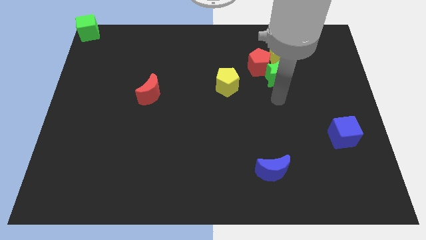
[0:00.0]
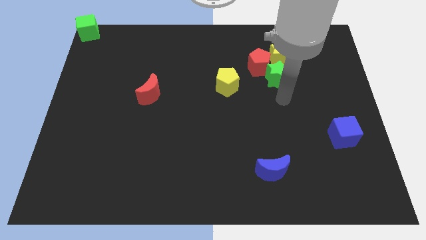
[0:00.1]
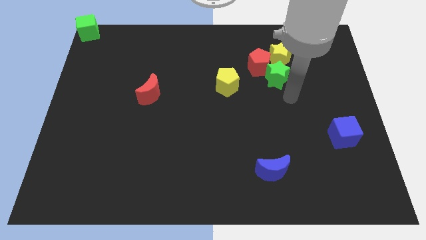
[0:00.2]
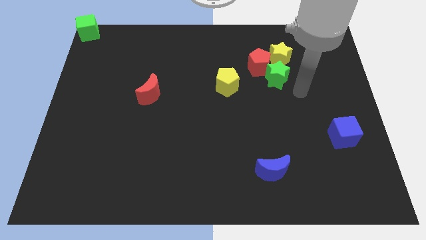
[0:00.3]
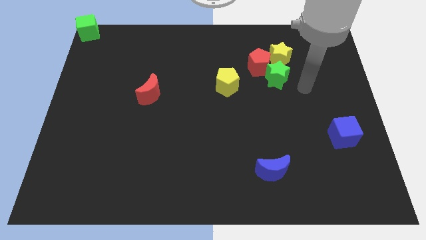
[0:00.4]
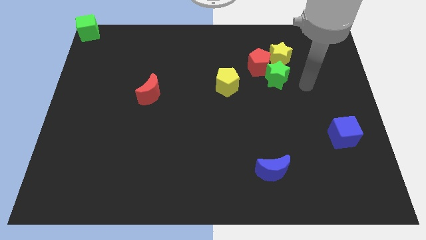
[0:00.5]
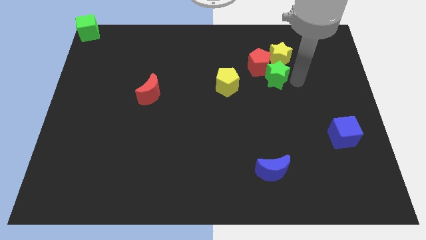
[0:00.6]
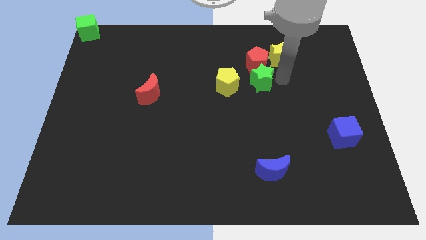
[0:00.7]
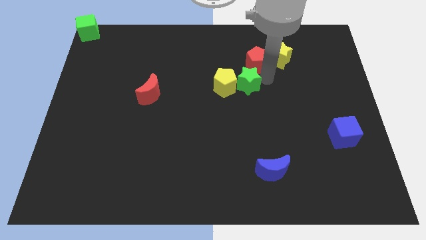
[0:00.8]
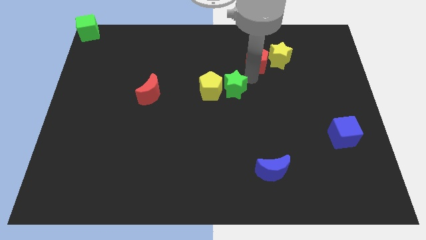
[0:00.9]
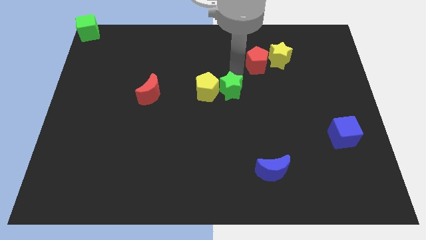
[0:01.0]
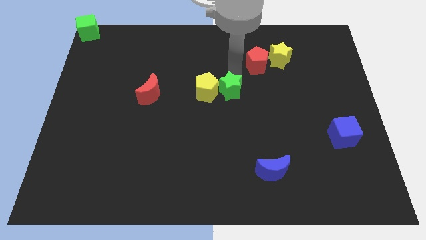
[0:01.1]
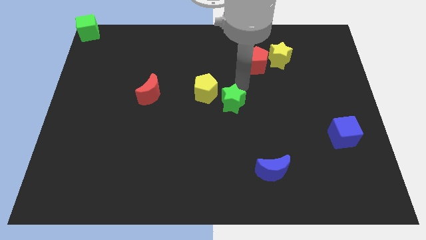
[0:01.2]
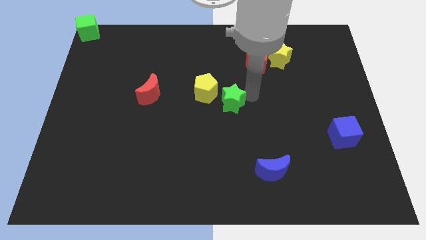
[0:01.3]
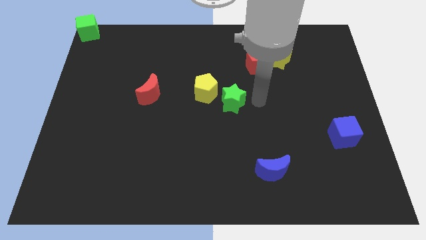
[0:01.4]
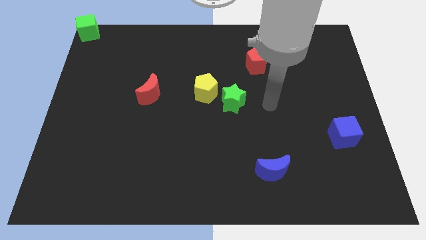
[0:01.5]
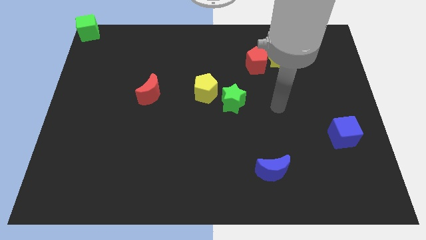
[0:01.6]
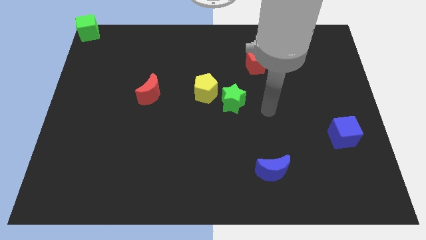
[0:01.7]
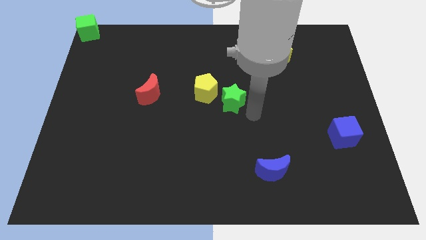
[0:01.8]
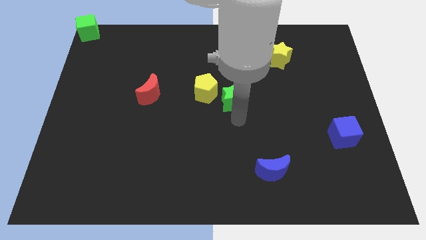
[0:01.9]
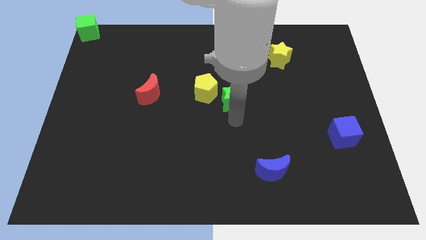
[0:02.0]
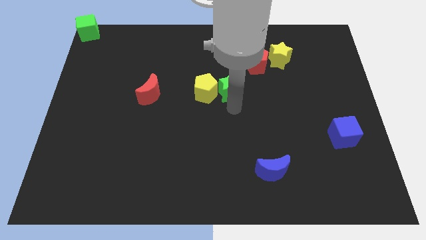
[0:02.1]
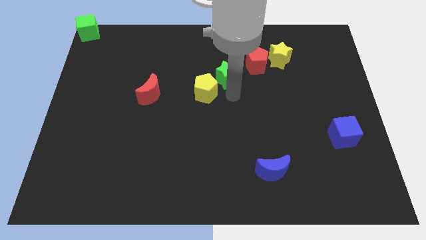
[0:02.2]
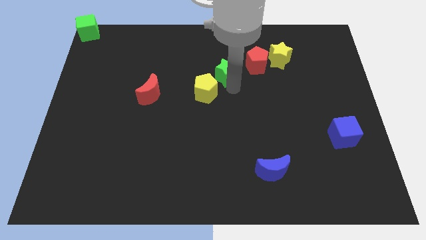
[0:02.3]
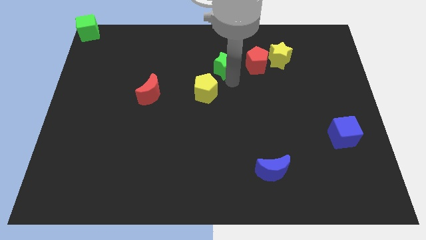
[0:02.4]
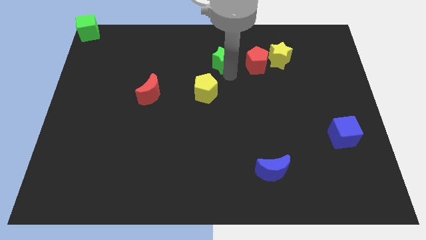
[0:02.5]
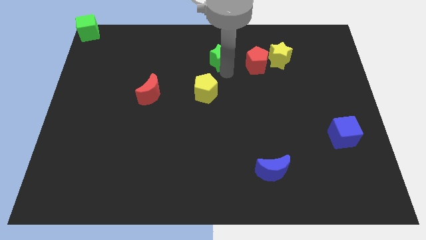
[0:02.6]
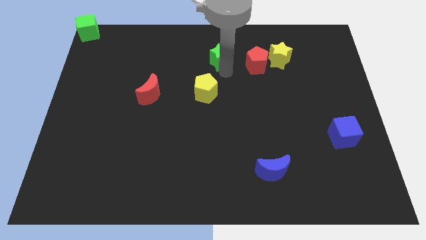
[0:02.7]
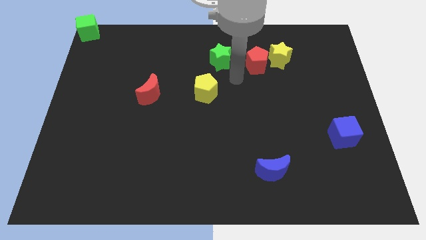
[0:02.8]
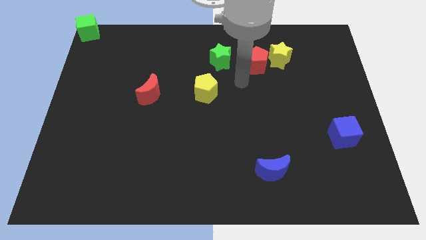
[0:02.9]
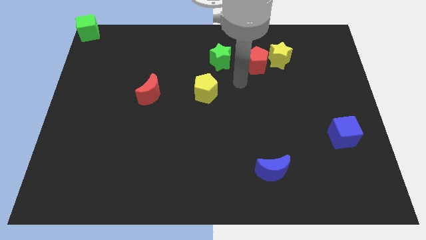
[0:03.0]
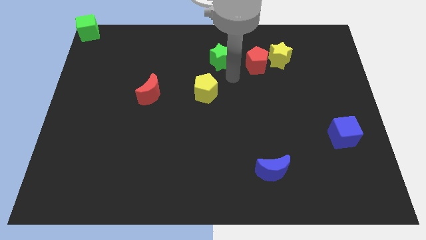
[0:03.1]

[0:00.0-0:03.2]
move the green star to the left side of the red pentagon

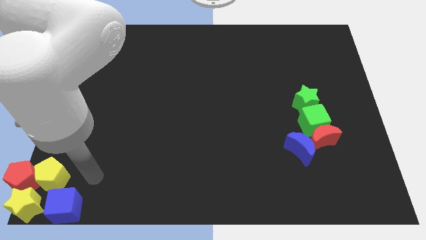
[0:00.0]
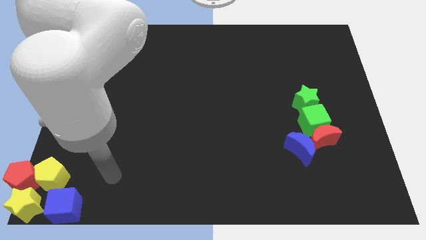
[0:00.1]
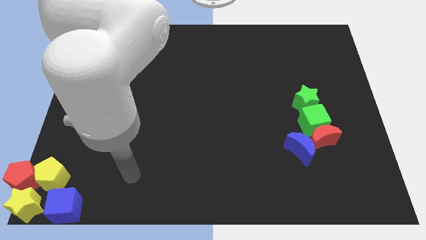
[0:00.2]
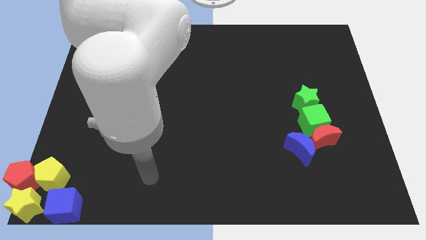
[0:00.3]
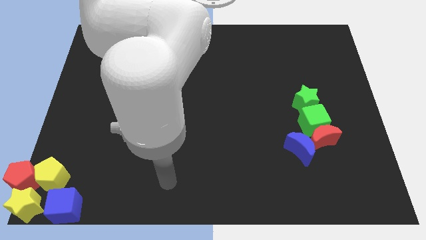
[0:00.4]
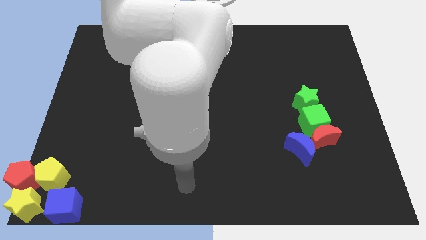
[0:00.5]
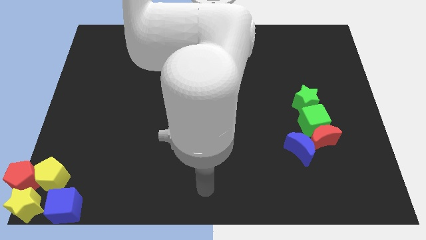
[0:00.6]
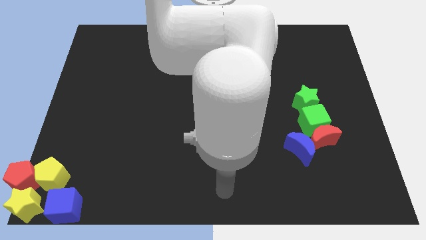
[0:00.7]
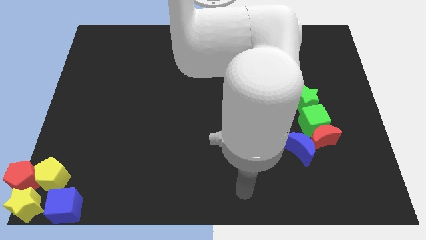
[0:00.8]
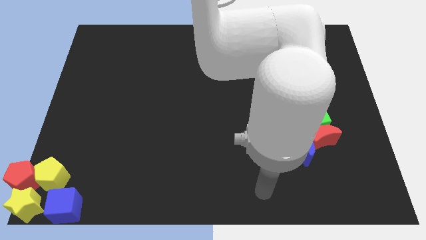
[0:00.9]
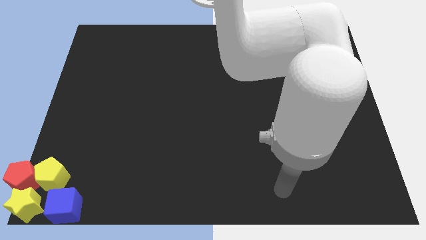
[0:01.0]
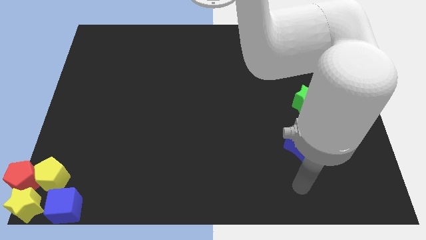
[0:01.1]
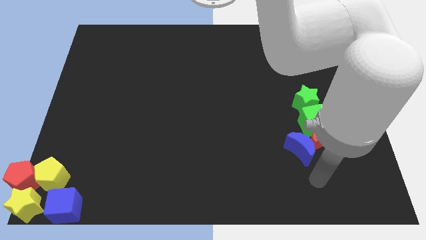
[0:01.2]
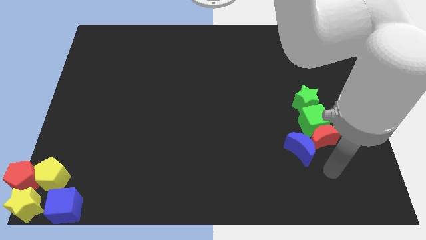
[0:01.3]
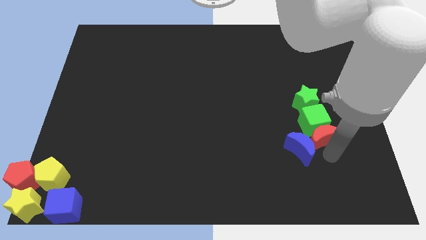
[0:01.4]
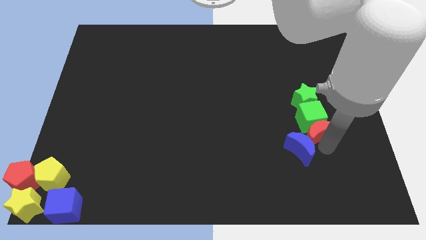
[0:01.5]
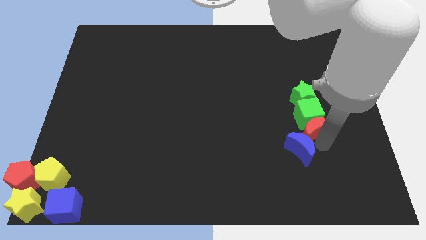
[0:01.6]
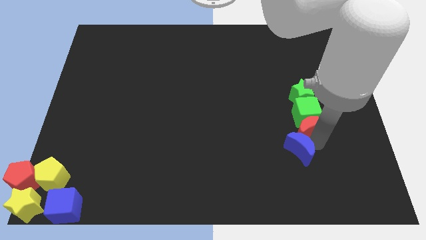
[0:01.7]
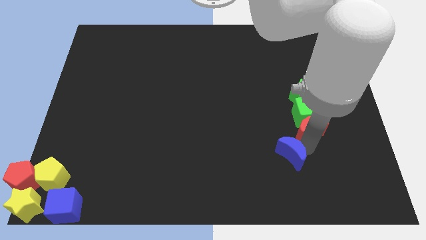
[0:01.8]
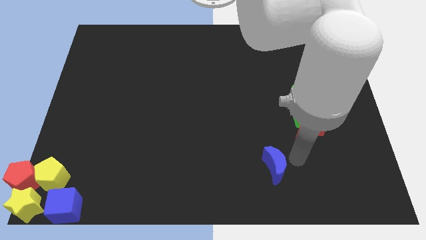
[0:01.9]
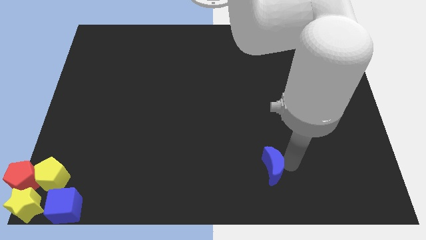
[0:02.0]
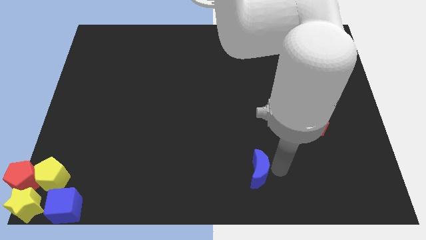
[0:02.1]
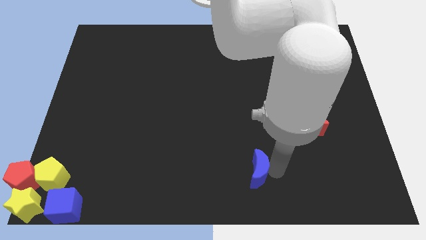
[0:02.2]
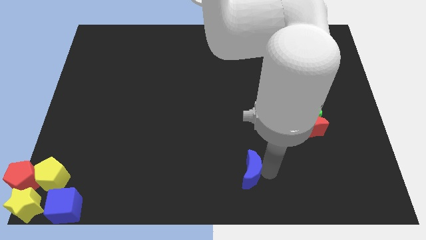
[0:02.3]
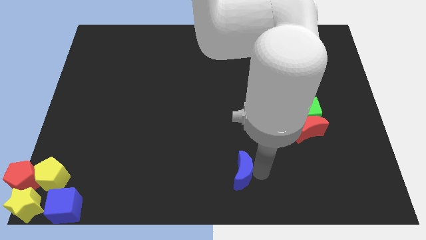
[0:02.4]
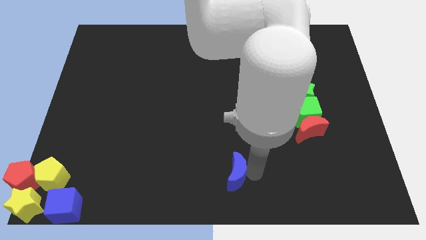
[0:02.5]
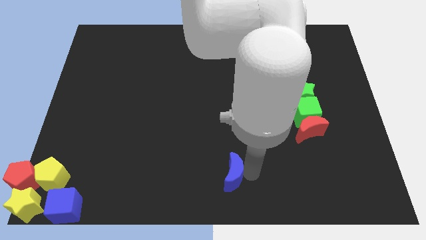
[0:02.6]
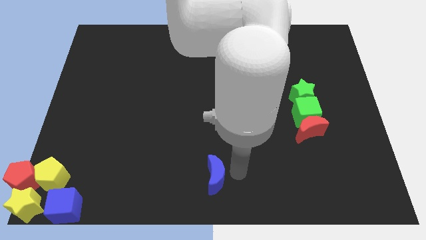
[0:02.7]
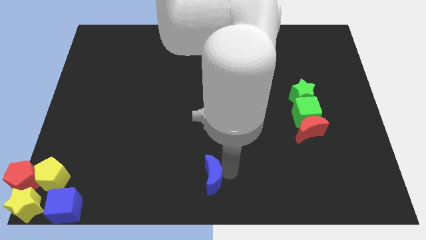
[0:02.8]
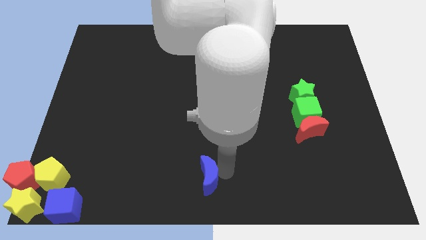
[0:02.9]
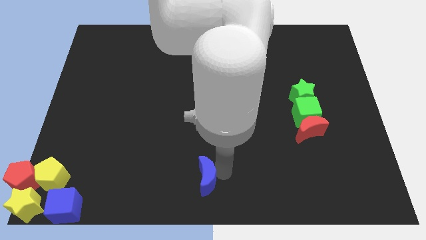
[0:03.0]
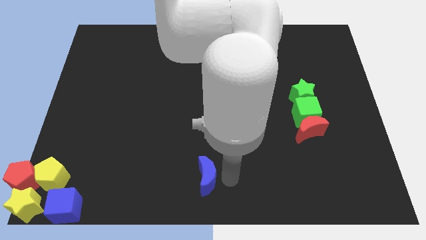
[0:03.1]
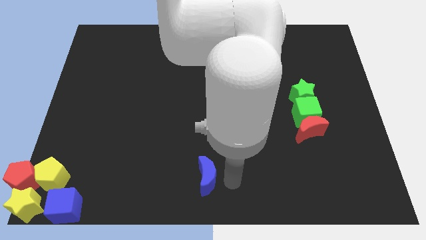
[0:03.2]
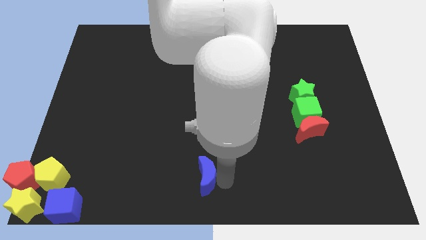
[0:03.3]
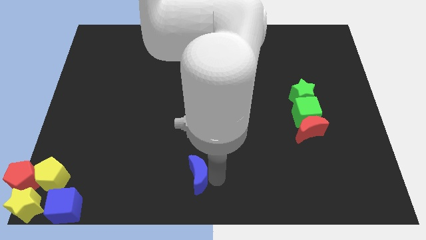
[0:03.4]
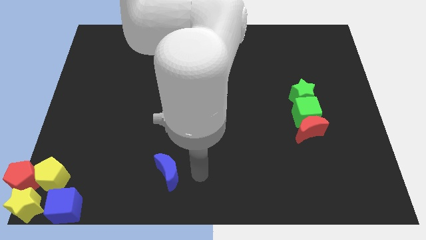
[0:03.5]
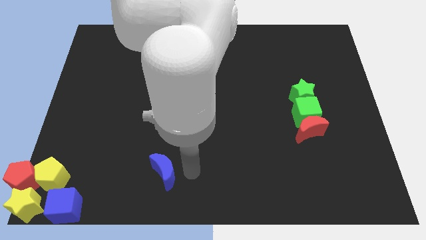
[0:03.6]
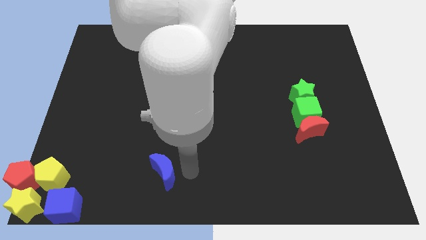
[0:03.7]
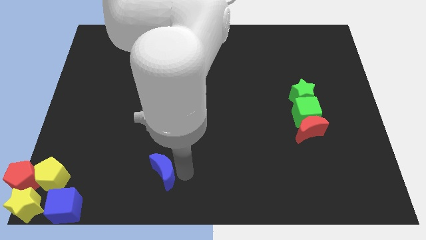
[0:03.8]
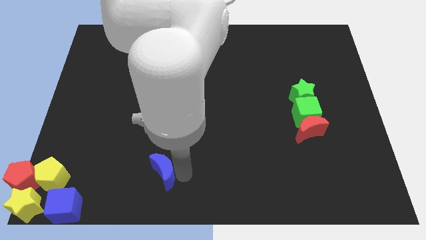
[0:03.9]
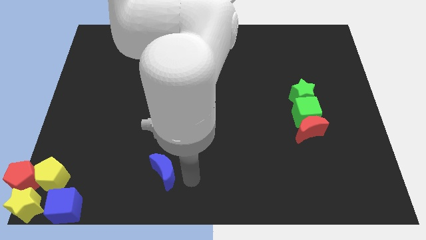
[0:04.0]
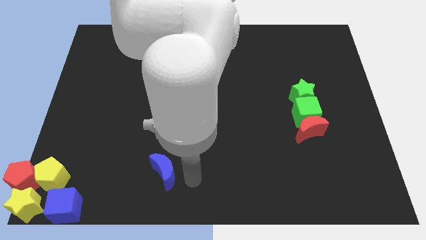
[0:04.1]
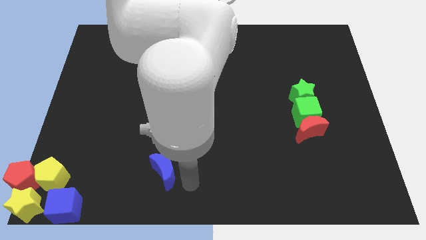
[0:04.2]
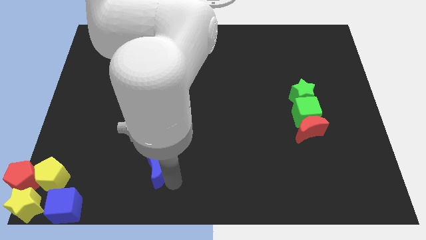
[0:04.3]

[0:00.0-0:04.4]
move the blue crescent to the left of the board

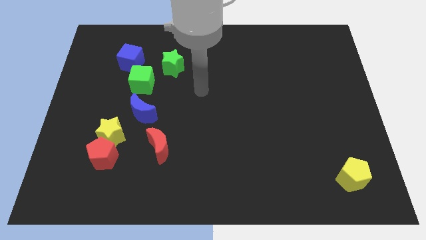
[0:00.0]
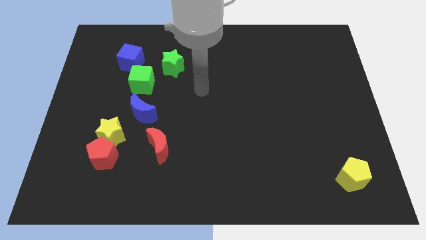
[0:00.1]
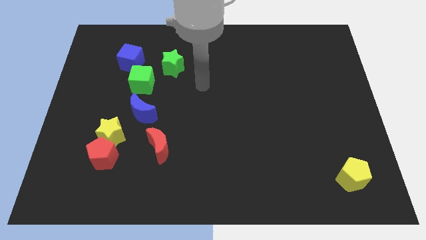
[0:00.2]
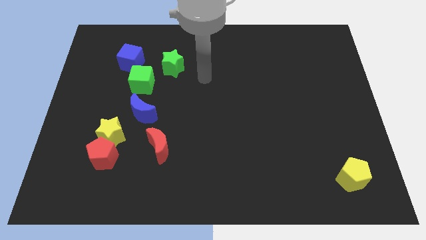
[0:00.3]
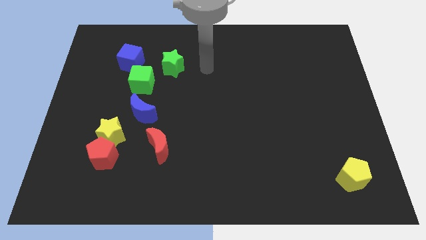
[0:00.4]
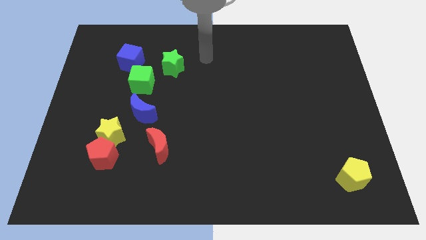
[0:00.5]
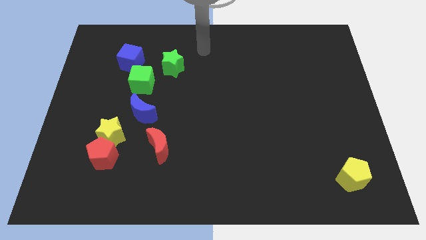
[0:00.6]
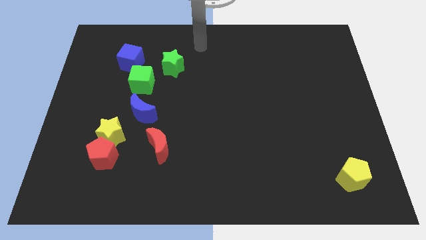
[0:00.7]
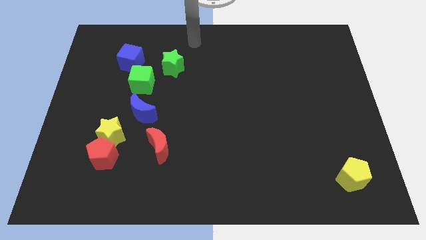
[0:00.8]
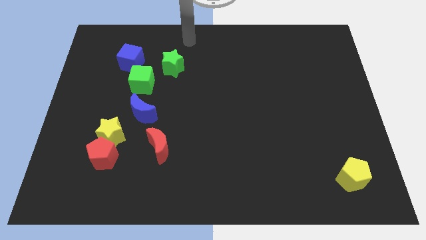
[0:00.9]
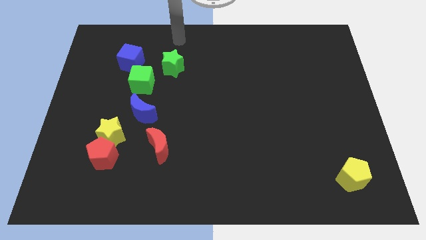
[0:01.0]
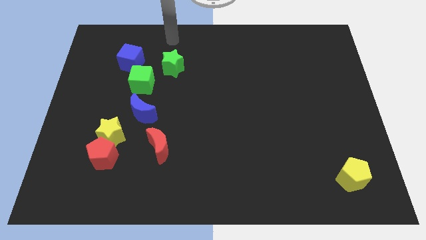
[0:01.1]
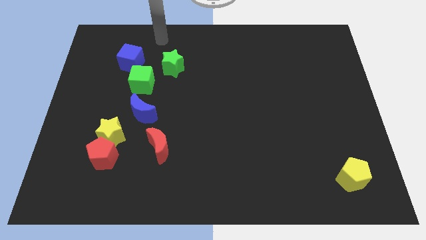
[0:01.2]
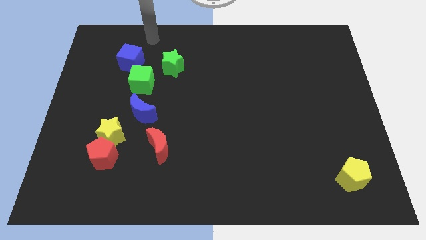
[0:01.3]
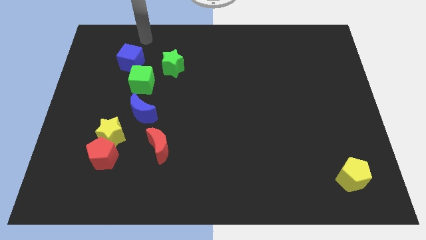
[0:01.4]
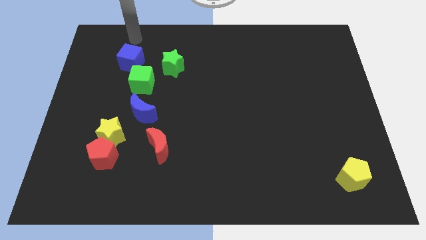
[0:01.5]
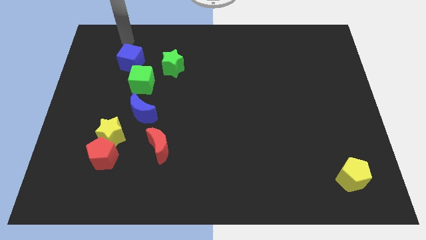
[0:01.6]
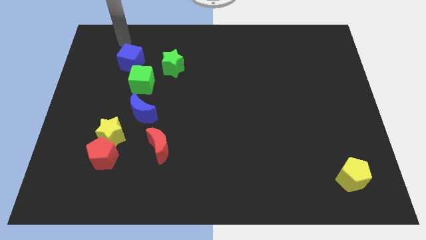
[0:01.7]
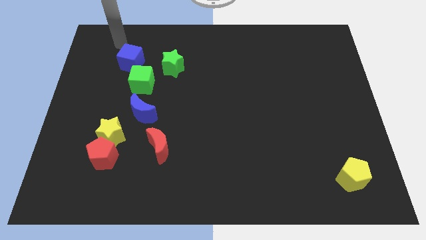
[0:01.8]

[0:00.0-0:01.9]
move your arm to the top of the blue cube
